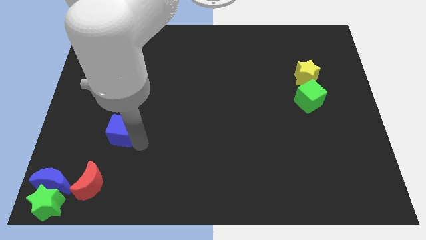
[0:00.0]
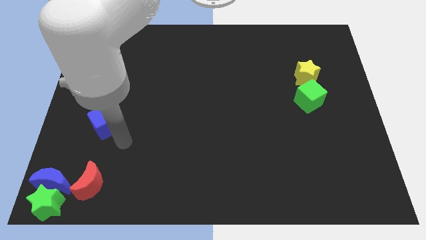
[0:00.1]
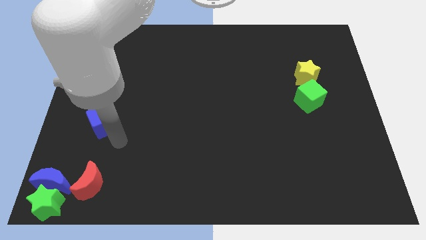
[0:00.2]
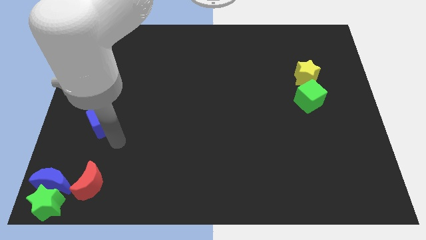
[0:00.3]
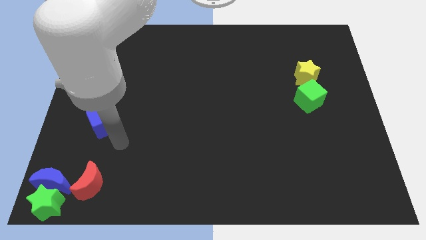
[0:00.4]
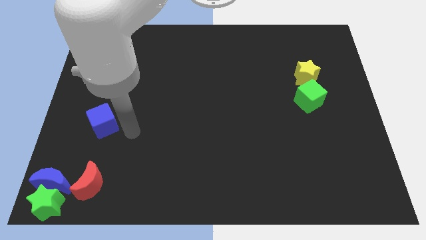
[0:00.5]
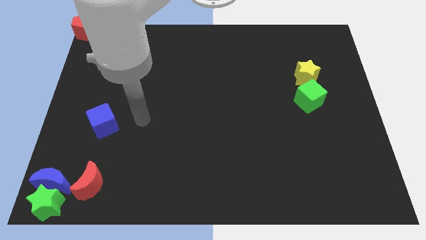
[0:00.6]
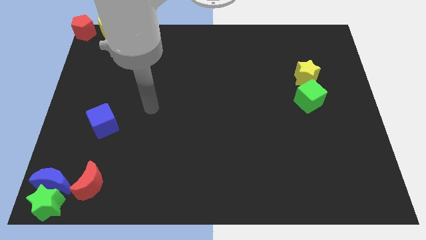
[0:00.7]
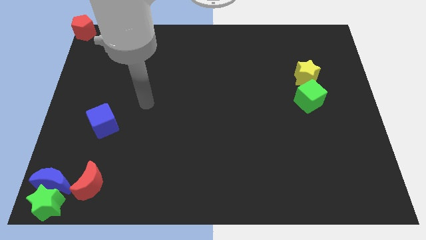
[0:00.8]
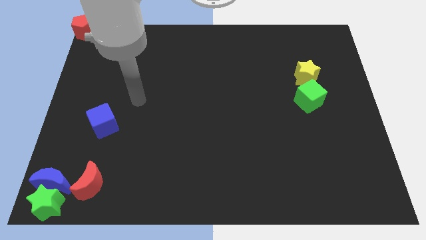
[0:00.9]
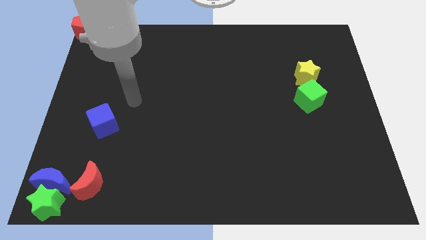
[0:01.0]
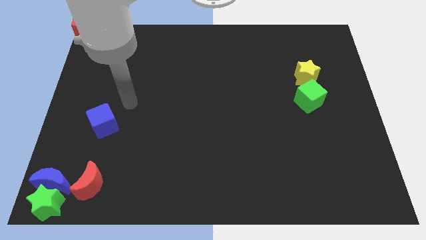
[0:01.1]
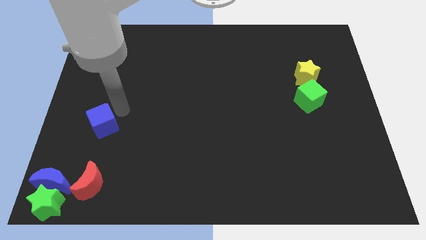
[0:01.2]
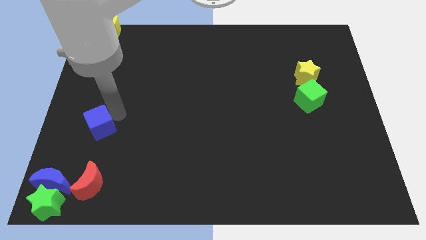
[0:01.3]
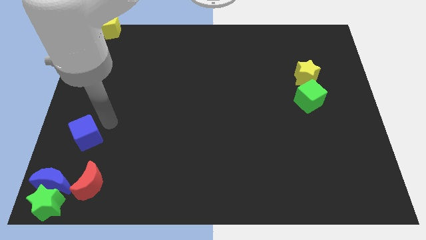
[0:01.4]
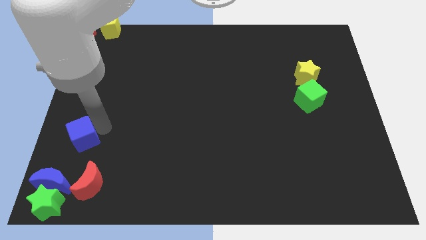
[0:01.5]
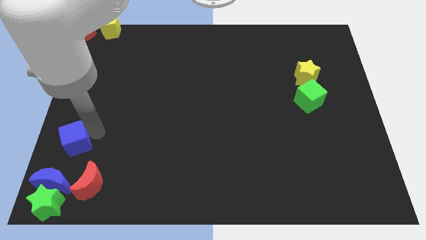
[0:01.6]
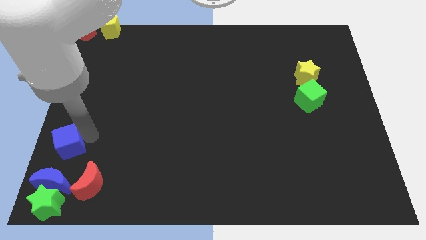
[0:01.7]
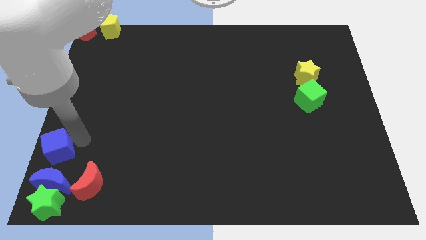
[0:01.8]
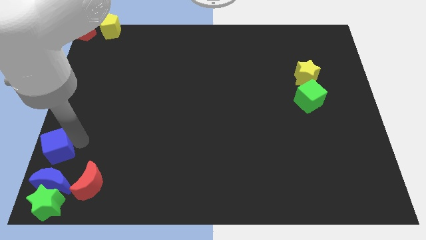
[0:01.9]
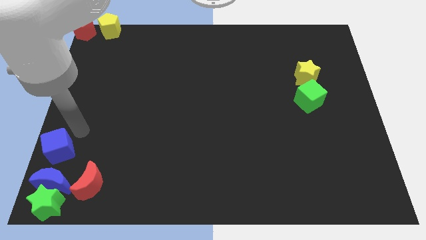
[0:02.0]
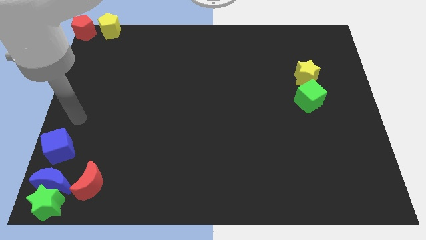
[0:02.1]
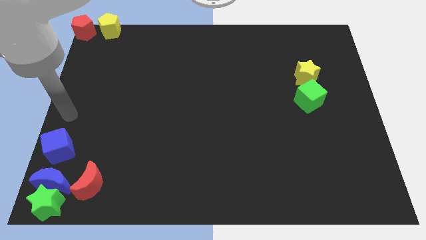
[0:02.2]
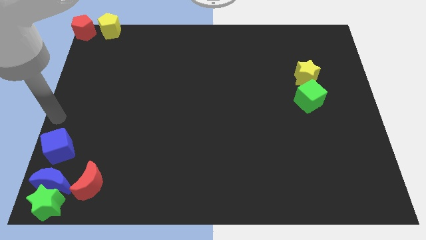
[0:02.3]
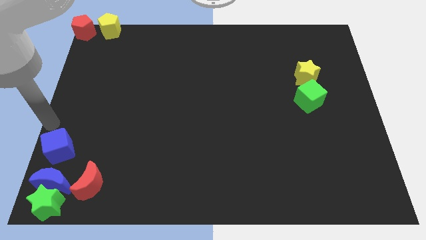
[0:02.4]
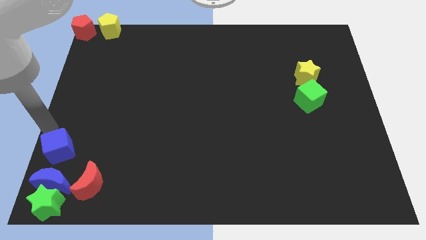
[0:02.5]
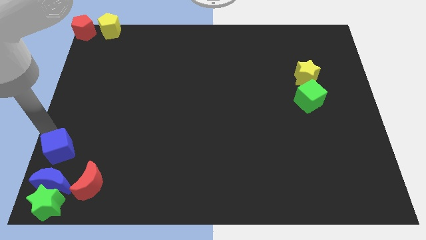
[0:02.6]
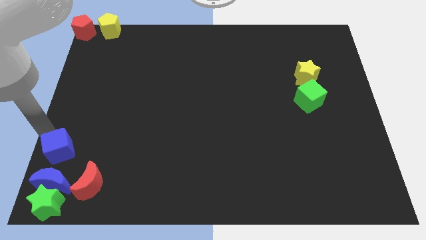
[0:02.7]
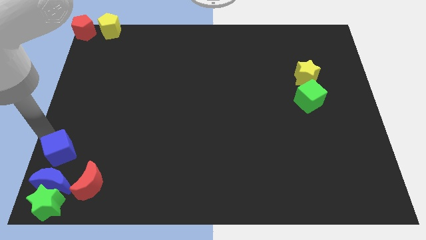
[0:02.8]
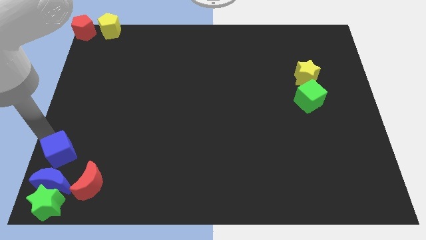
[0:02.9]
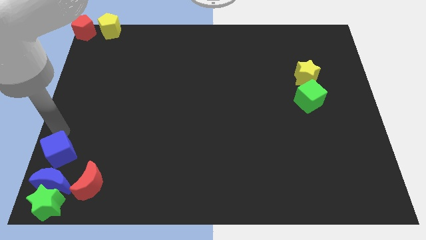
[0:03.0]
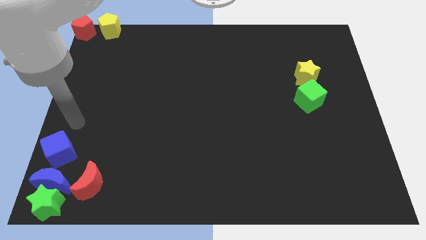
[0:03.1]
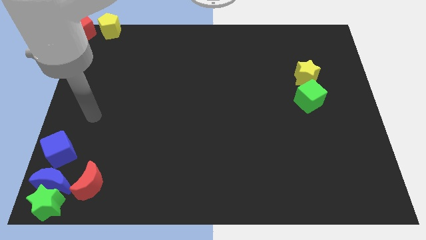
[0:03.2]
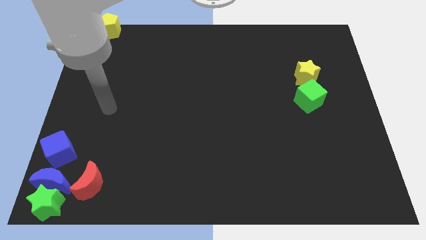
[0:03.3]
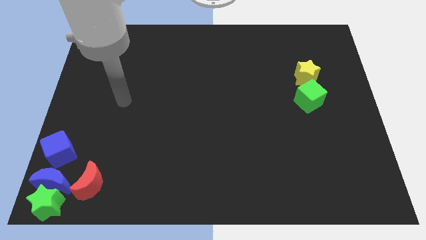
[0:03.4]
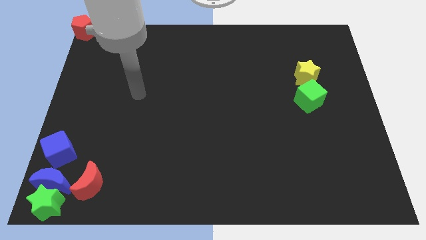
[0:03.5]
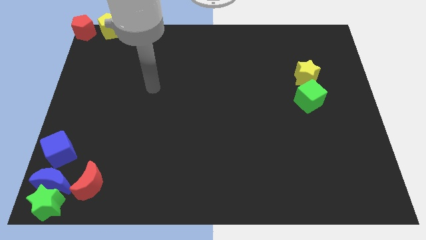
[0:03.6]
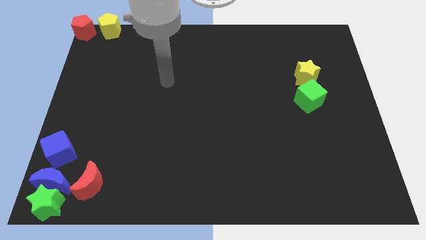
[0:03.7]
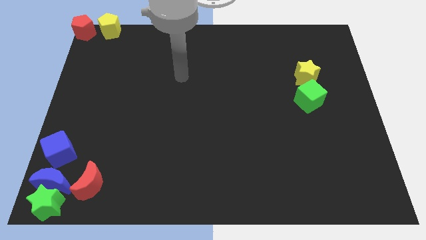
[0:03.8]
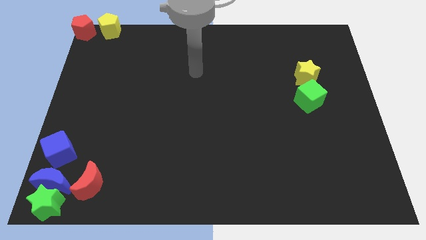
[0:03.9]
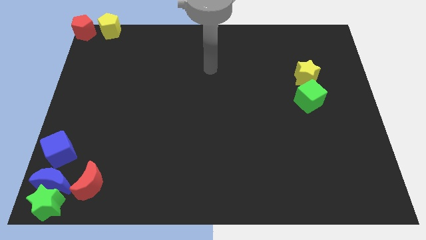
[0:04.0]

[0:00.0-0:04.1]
put the blue cube vertically above the blue moon

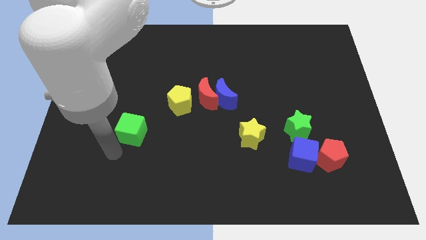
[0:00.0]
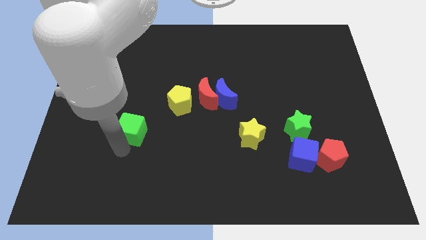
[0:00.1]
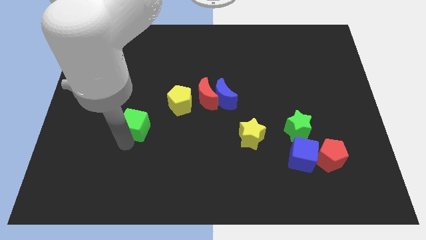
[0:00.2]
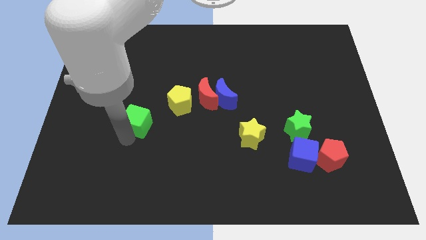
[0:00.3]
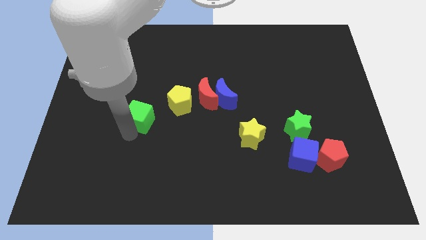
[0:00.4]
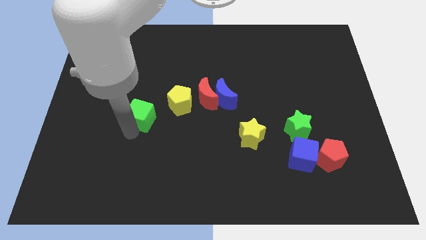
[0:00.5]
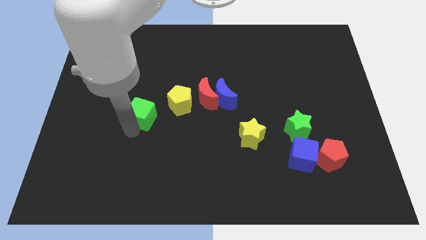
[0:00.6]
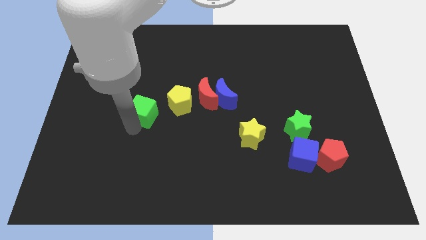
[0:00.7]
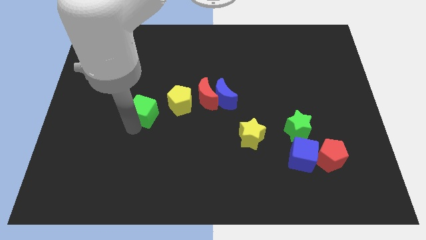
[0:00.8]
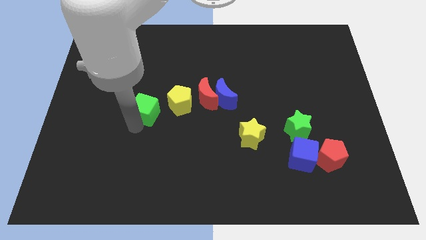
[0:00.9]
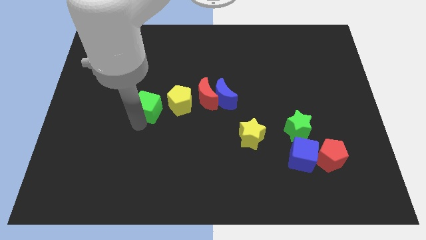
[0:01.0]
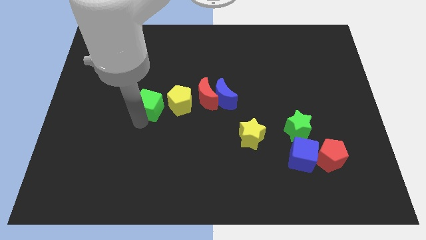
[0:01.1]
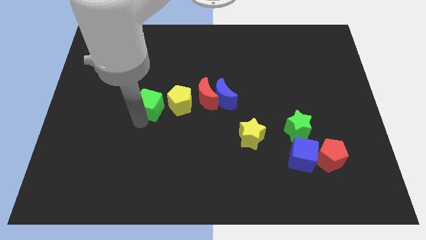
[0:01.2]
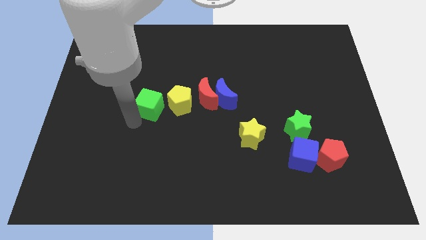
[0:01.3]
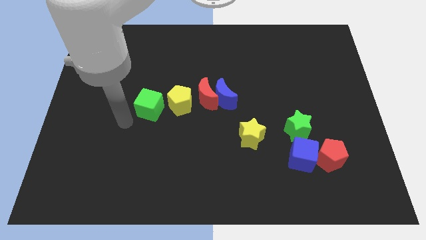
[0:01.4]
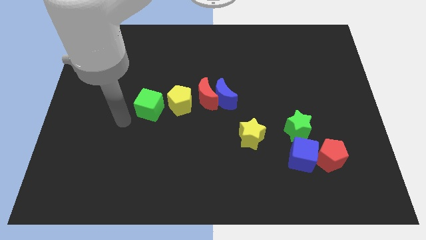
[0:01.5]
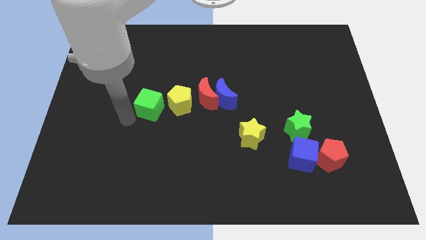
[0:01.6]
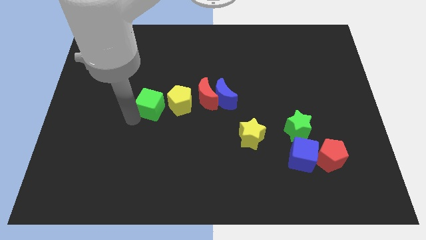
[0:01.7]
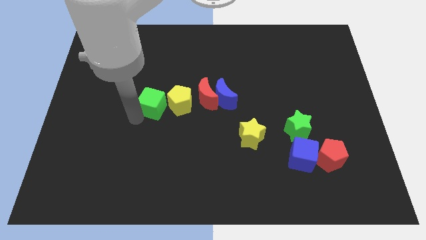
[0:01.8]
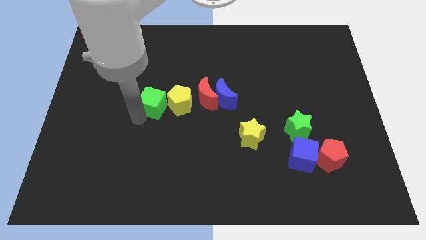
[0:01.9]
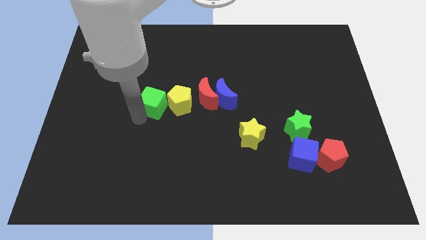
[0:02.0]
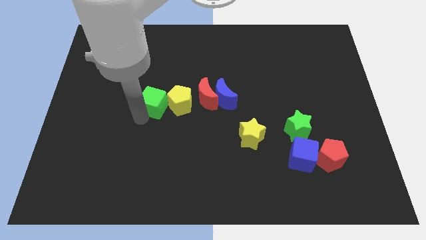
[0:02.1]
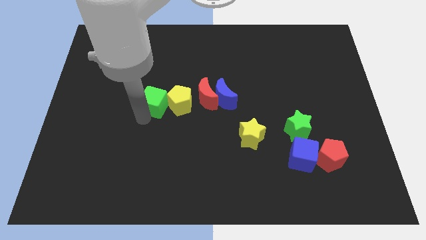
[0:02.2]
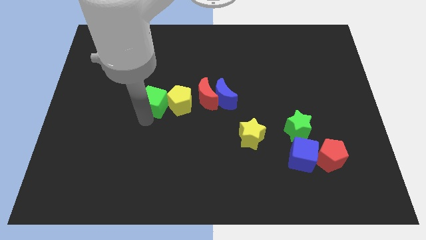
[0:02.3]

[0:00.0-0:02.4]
push the green cube to the left of the yellow pentagon

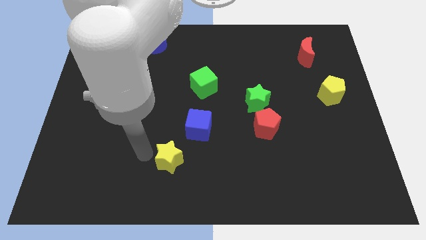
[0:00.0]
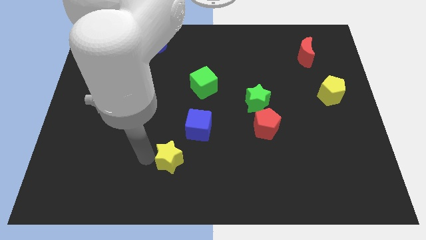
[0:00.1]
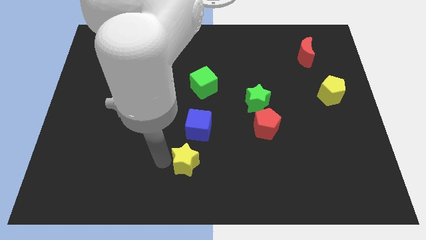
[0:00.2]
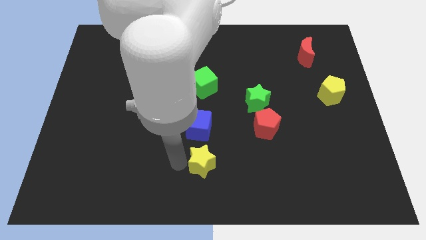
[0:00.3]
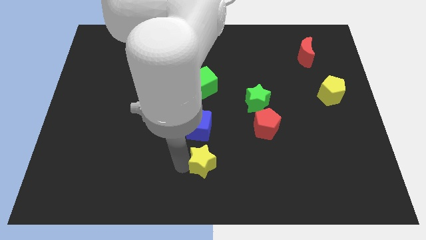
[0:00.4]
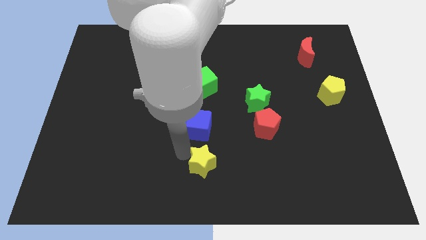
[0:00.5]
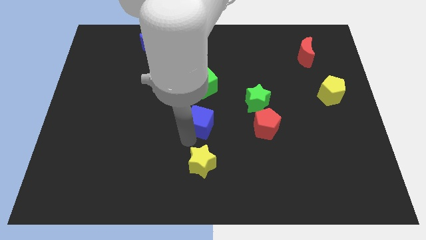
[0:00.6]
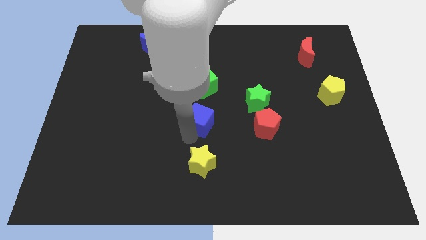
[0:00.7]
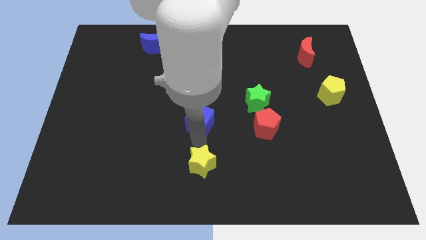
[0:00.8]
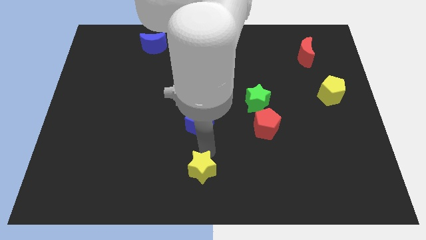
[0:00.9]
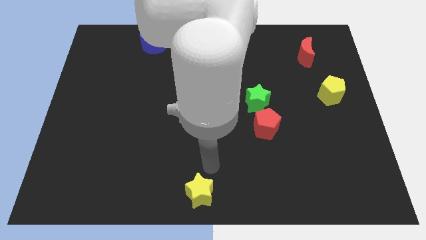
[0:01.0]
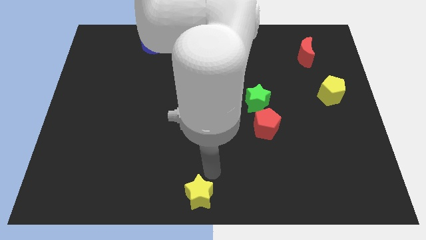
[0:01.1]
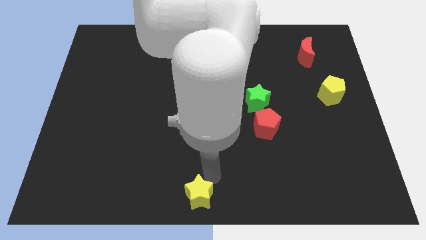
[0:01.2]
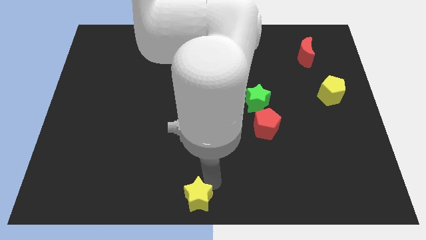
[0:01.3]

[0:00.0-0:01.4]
push the yellow star towards the bottom center of the board

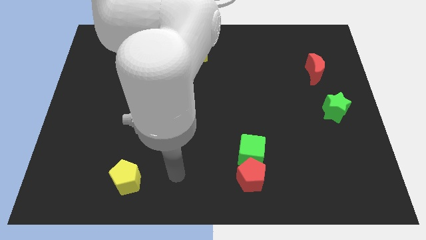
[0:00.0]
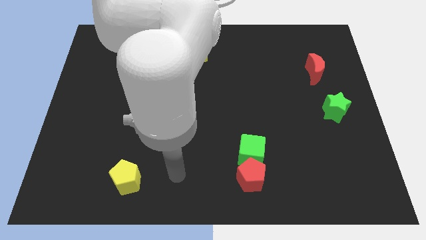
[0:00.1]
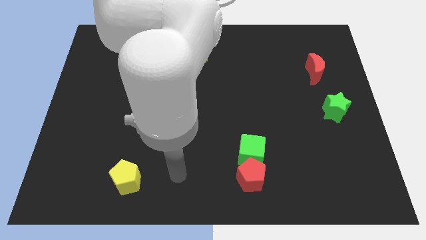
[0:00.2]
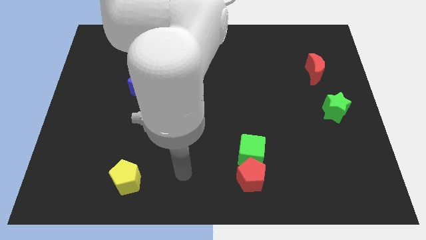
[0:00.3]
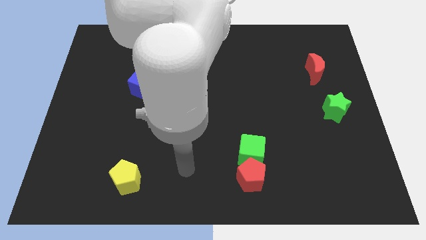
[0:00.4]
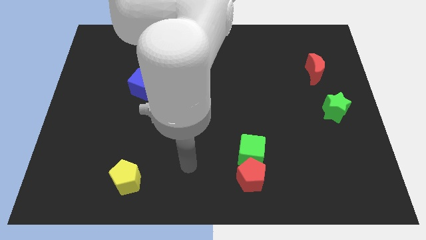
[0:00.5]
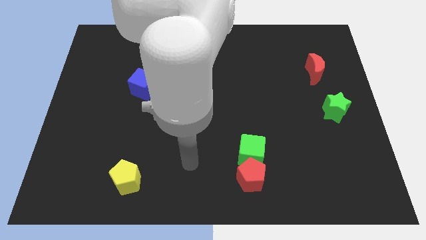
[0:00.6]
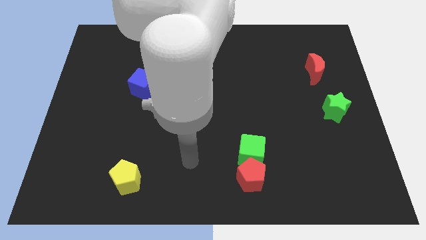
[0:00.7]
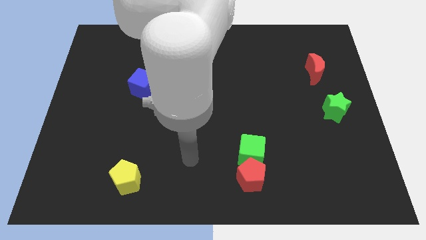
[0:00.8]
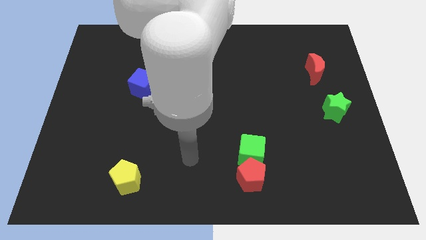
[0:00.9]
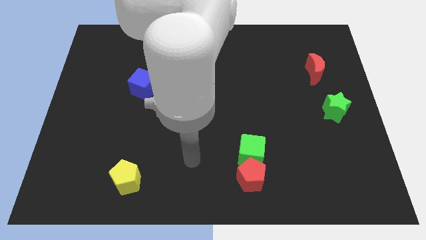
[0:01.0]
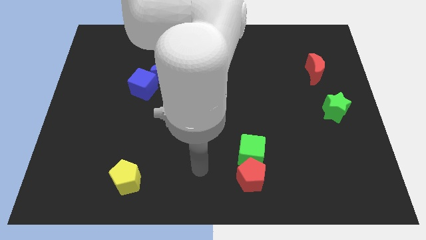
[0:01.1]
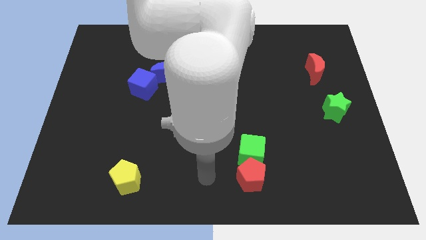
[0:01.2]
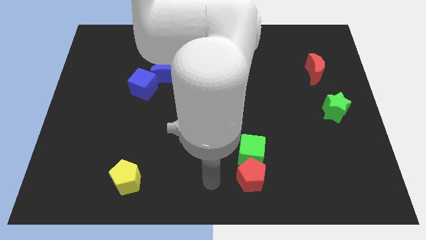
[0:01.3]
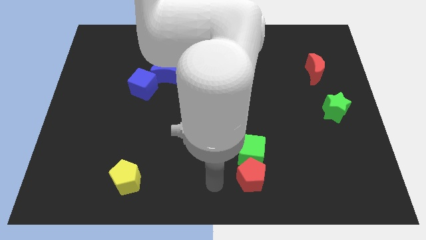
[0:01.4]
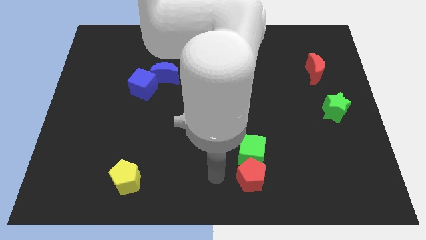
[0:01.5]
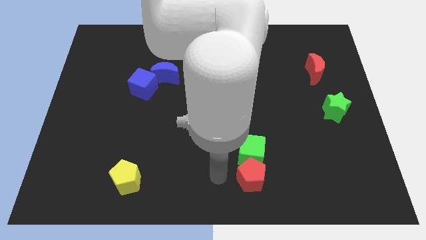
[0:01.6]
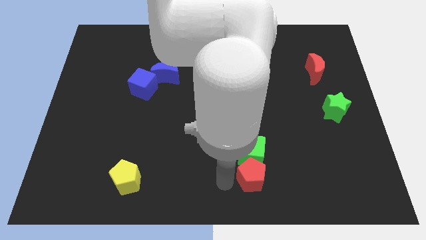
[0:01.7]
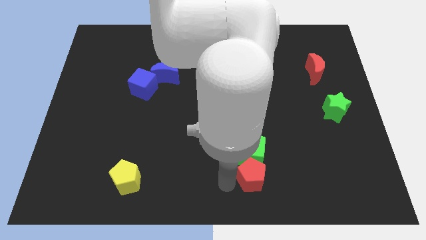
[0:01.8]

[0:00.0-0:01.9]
move your arm to the left of red pentagon
